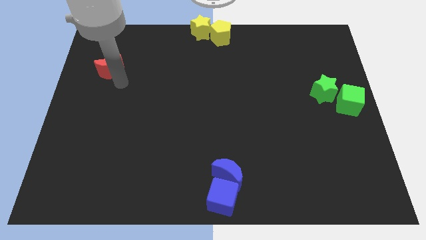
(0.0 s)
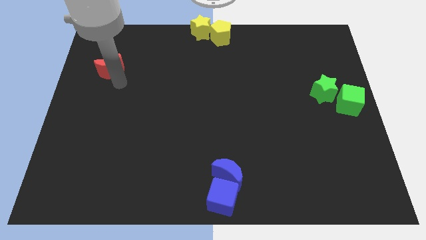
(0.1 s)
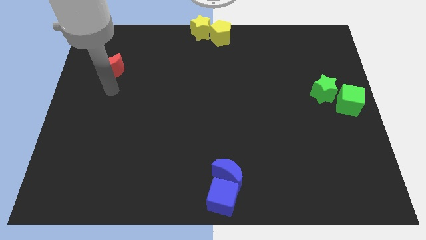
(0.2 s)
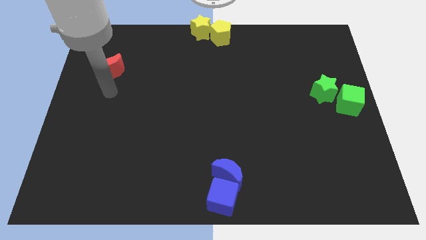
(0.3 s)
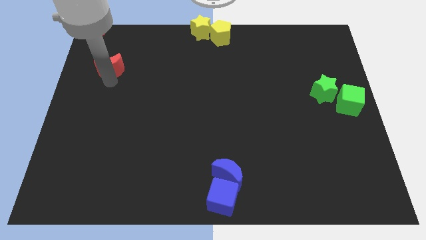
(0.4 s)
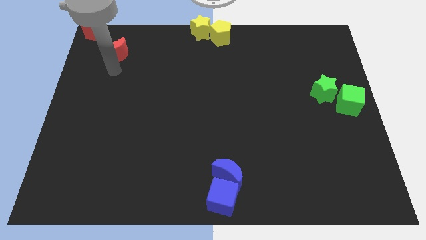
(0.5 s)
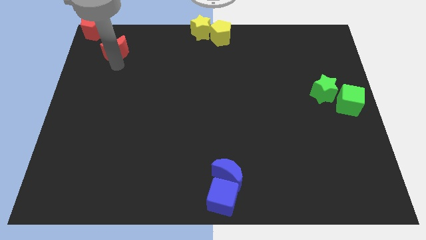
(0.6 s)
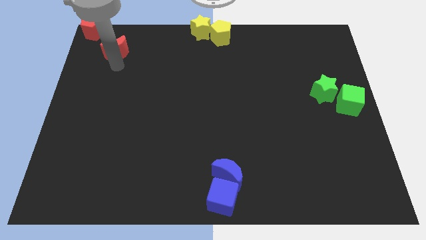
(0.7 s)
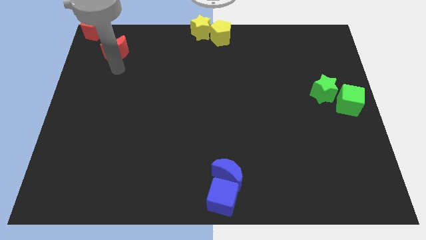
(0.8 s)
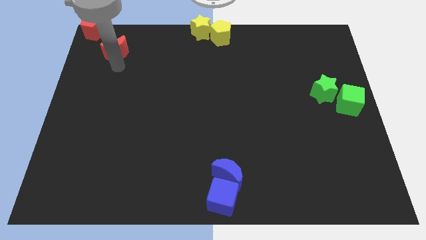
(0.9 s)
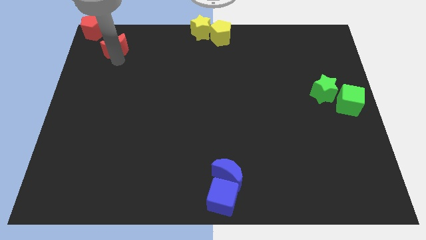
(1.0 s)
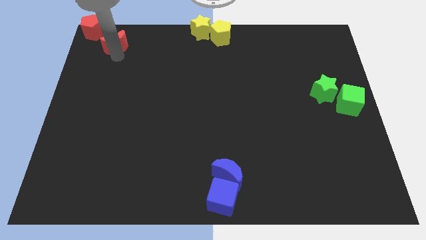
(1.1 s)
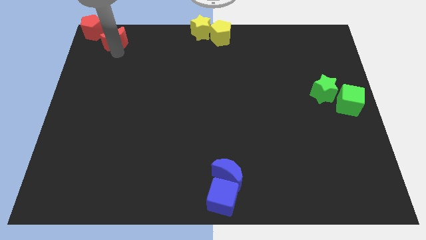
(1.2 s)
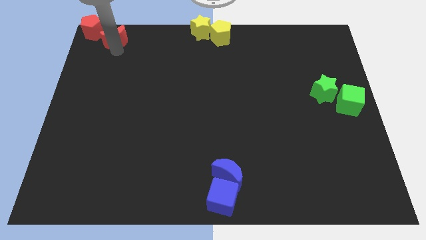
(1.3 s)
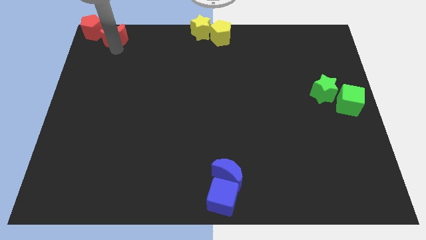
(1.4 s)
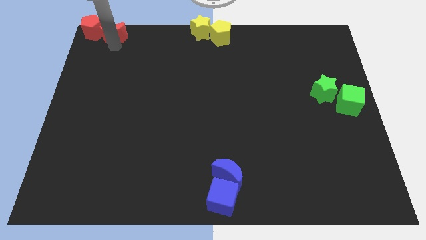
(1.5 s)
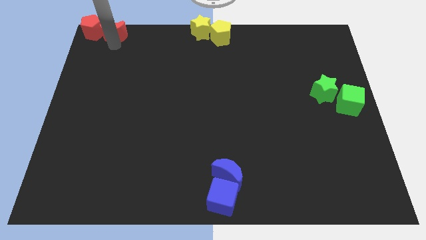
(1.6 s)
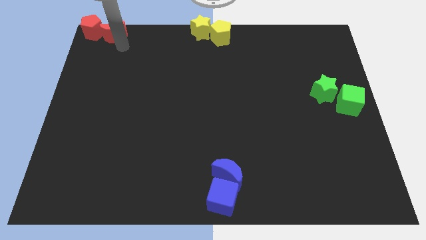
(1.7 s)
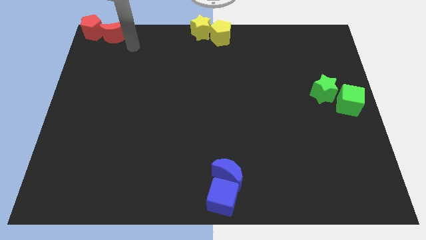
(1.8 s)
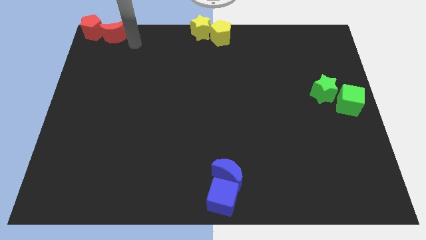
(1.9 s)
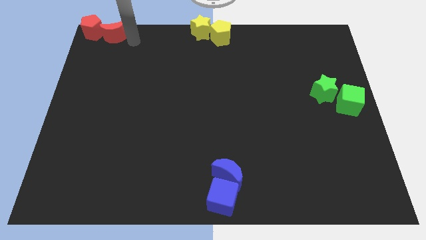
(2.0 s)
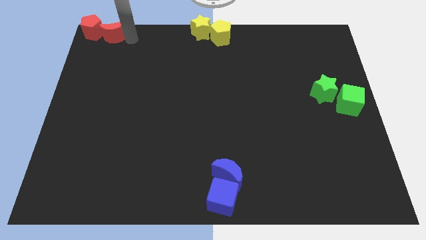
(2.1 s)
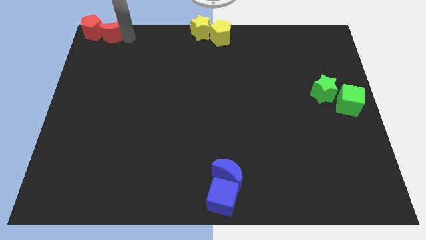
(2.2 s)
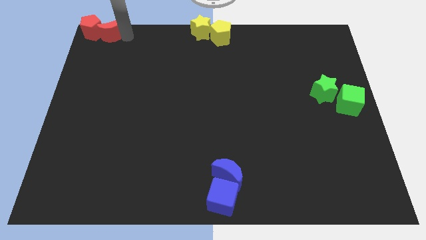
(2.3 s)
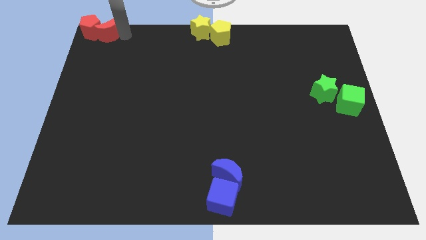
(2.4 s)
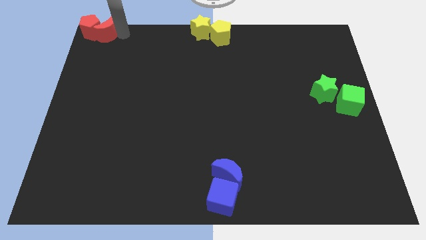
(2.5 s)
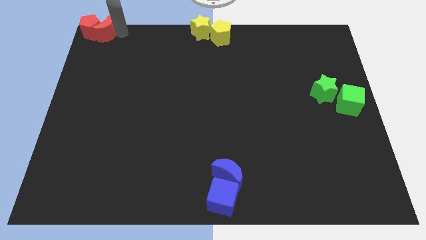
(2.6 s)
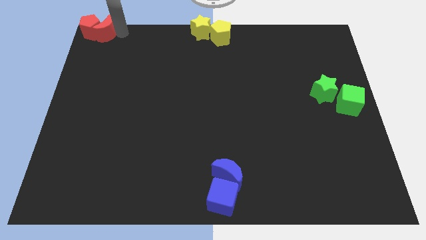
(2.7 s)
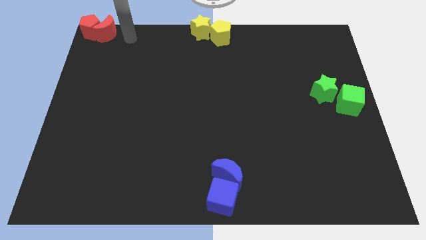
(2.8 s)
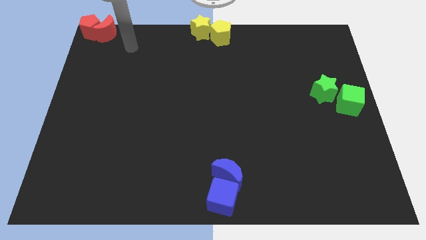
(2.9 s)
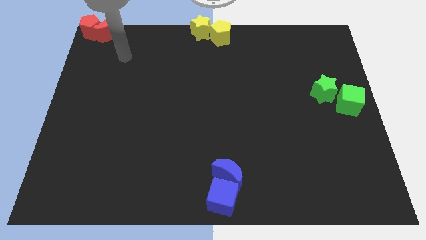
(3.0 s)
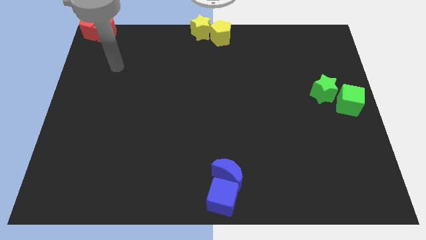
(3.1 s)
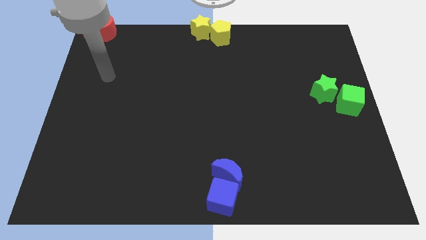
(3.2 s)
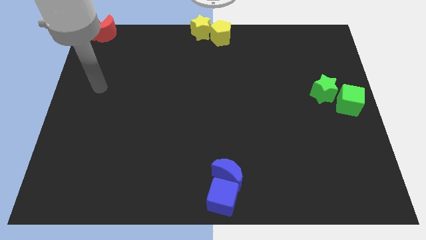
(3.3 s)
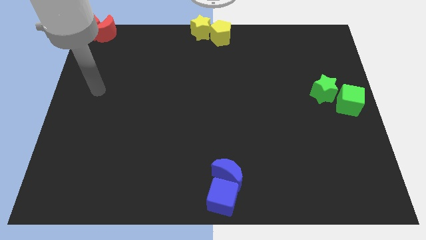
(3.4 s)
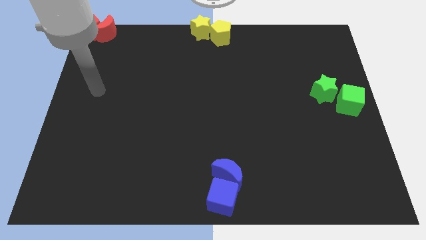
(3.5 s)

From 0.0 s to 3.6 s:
place the red crescent close to the red pentagon

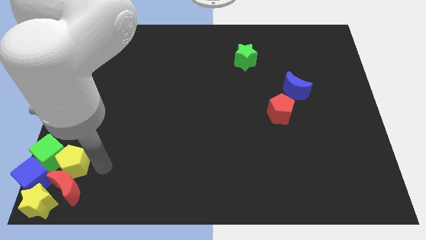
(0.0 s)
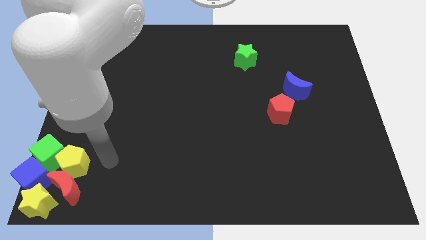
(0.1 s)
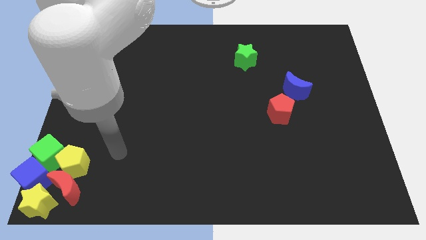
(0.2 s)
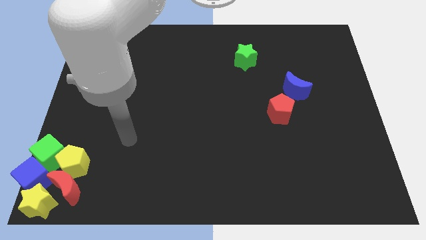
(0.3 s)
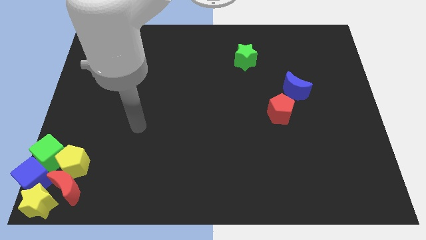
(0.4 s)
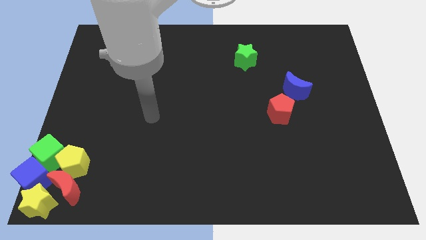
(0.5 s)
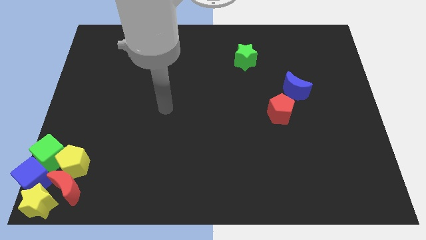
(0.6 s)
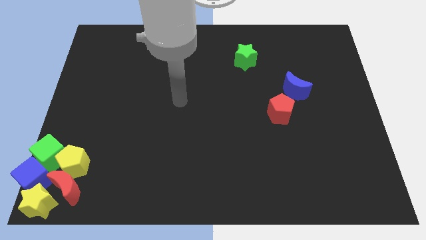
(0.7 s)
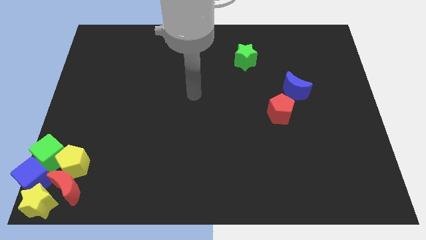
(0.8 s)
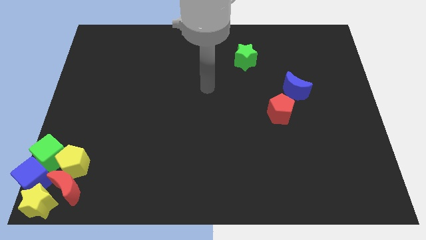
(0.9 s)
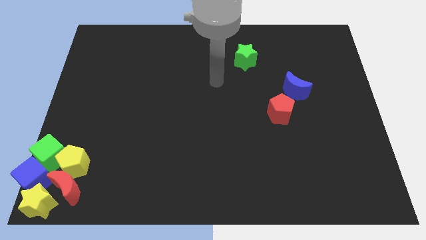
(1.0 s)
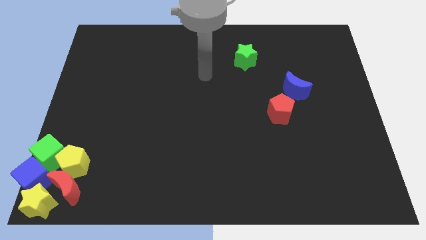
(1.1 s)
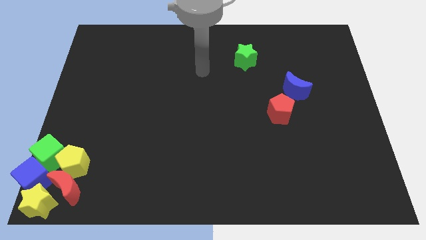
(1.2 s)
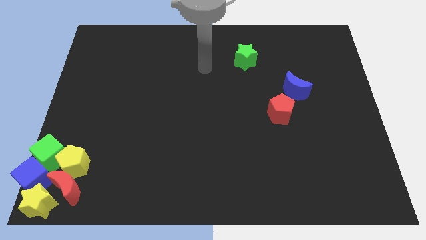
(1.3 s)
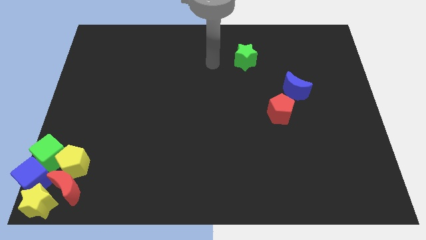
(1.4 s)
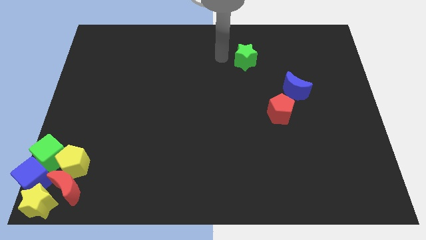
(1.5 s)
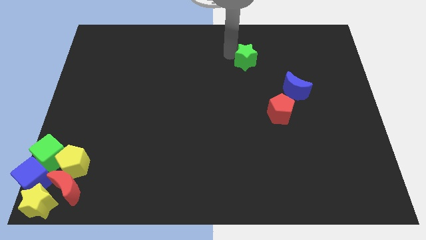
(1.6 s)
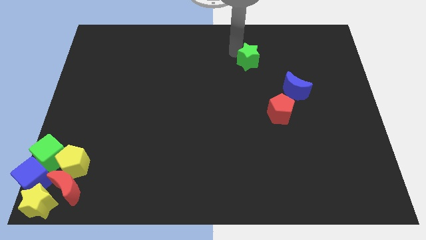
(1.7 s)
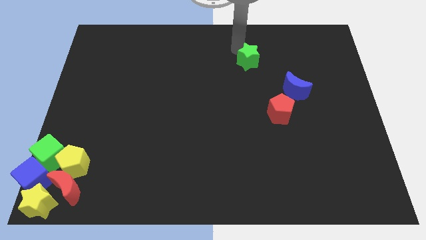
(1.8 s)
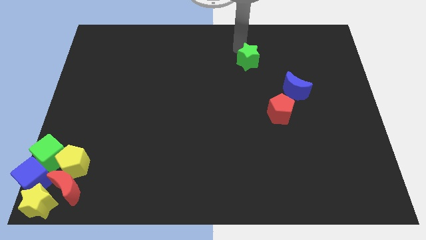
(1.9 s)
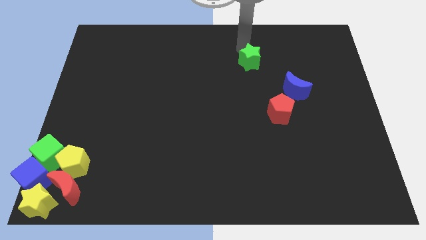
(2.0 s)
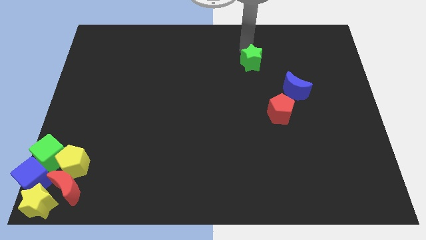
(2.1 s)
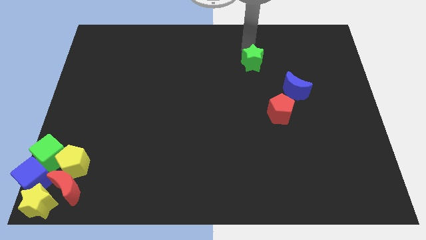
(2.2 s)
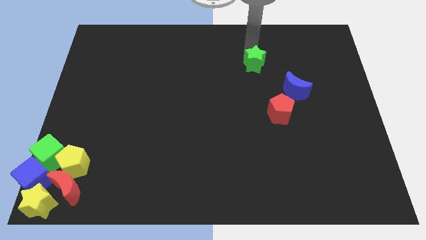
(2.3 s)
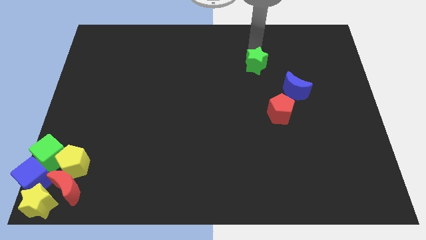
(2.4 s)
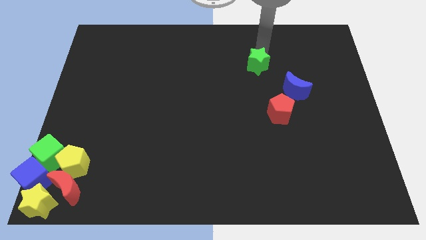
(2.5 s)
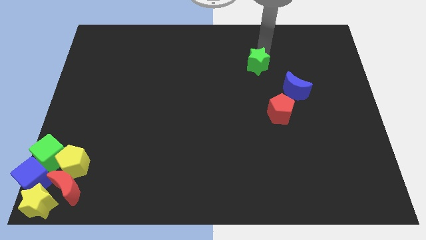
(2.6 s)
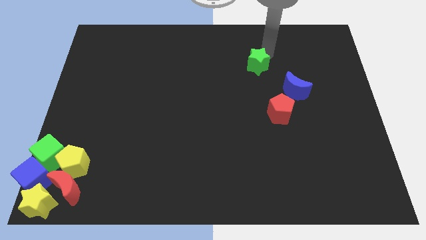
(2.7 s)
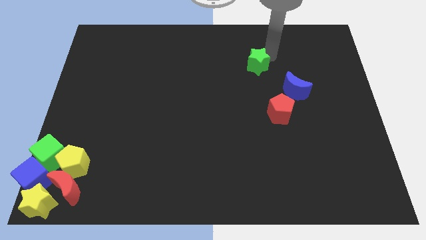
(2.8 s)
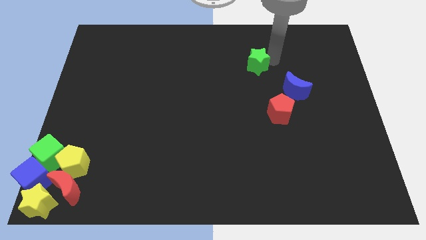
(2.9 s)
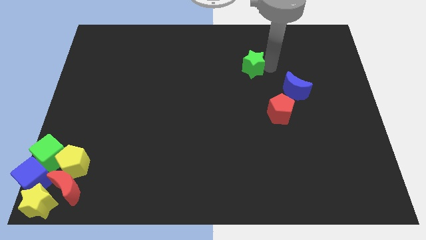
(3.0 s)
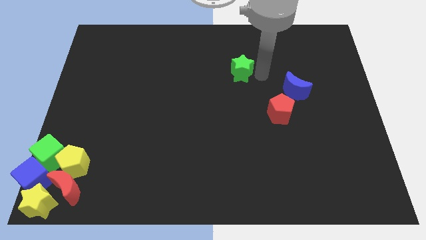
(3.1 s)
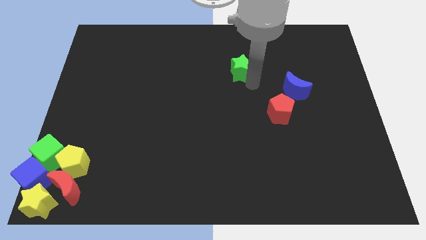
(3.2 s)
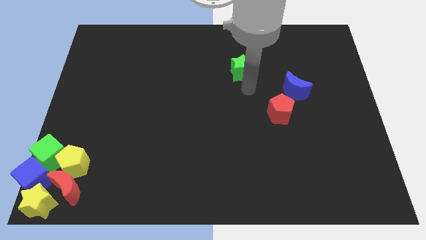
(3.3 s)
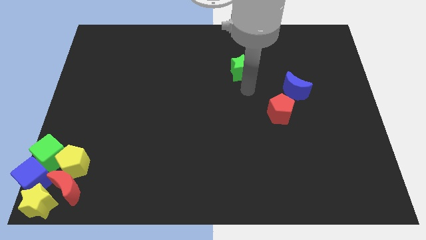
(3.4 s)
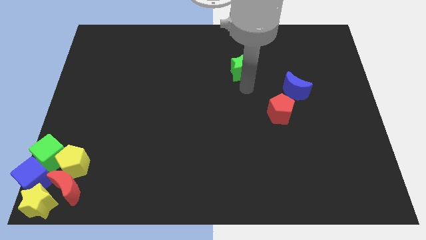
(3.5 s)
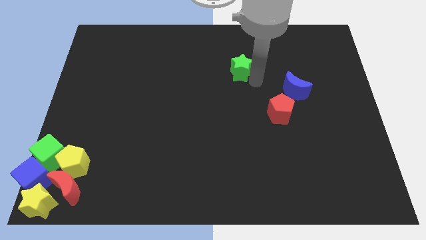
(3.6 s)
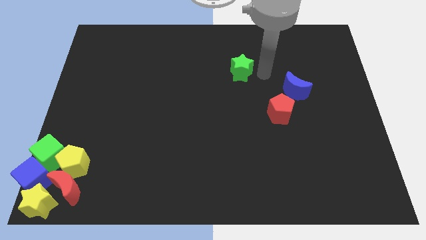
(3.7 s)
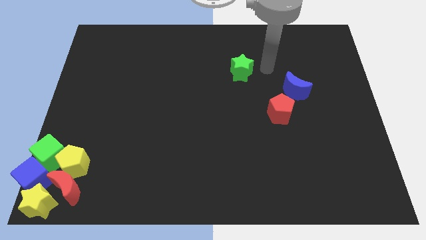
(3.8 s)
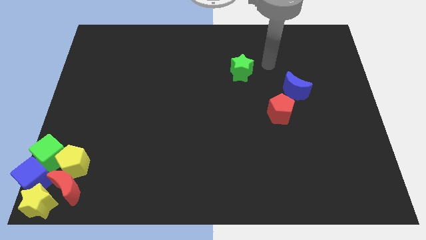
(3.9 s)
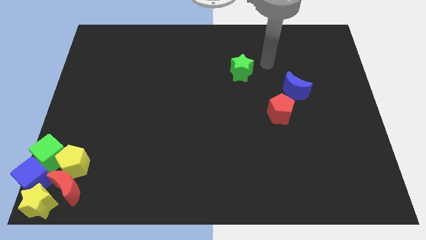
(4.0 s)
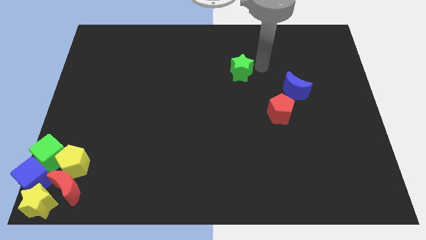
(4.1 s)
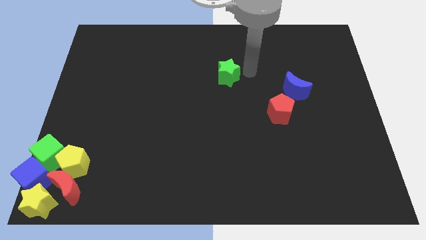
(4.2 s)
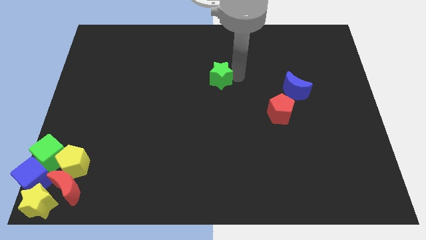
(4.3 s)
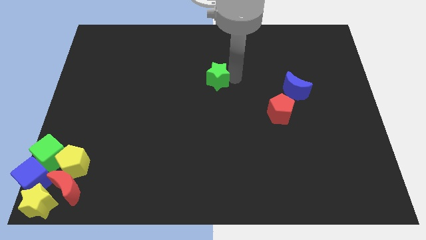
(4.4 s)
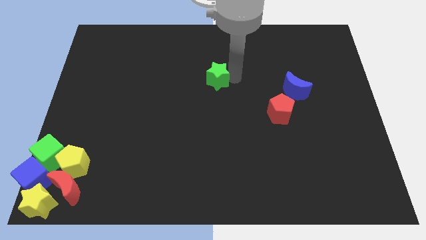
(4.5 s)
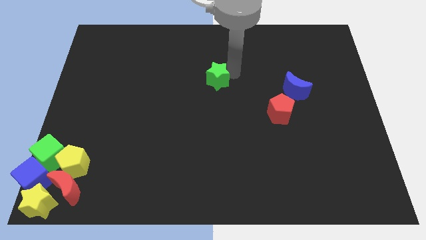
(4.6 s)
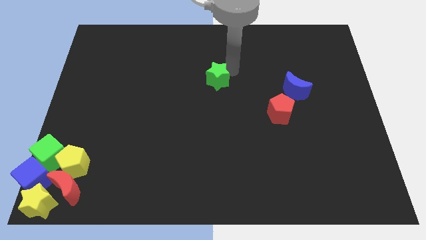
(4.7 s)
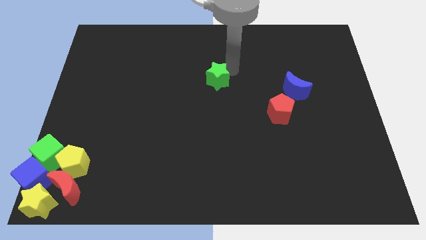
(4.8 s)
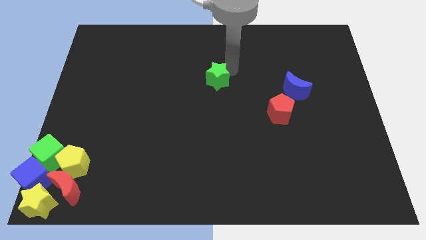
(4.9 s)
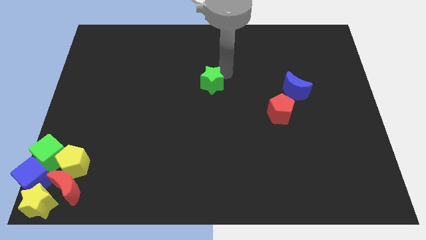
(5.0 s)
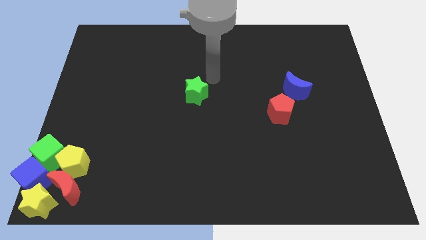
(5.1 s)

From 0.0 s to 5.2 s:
move the green star to the center of the board
